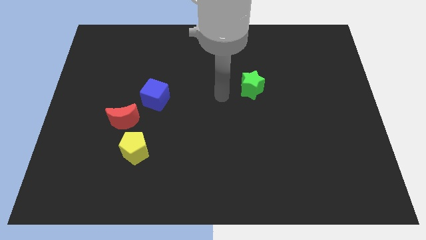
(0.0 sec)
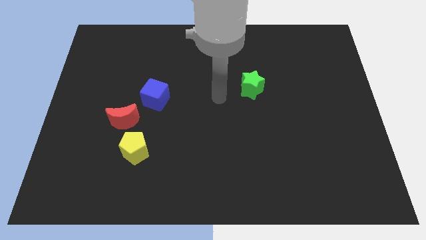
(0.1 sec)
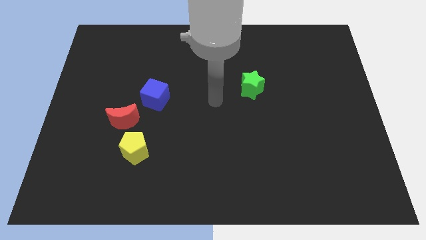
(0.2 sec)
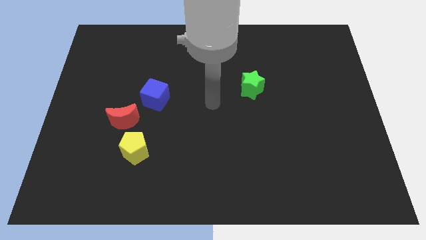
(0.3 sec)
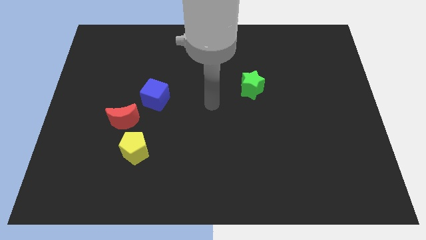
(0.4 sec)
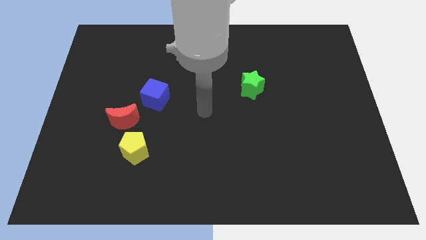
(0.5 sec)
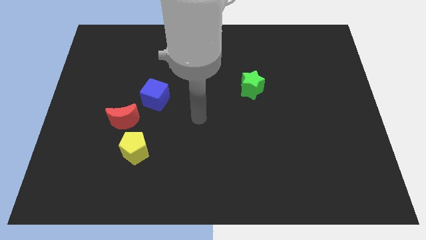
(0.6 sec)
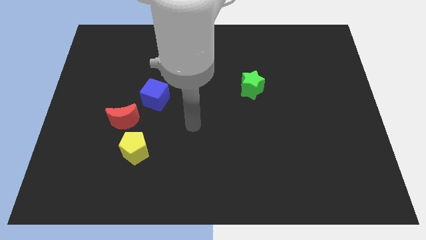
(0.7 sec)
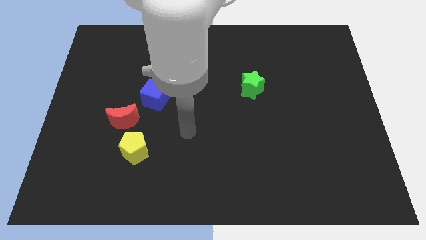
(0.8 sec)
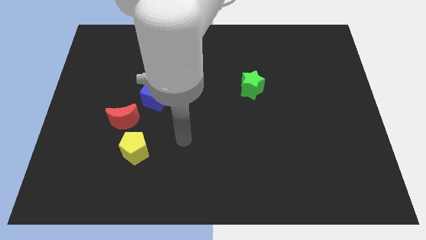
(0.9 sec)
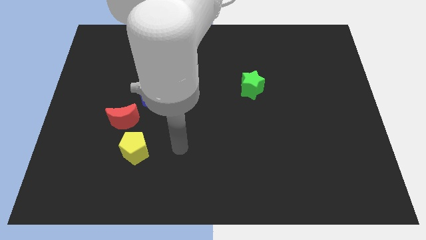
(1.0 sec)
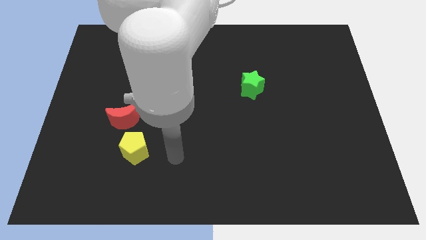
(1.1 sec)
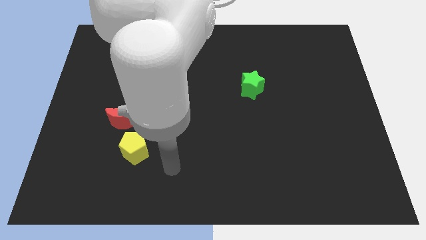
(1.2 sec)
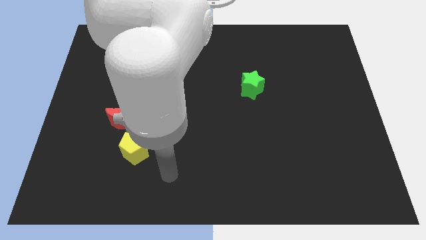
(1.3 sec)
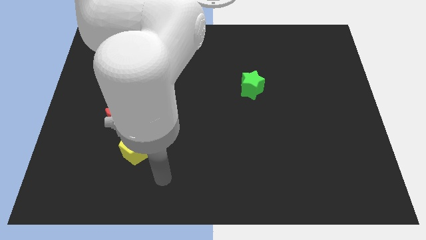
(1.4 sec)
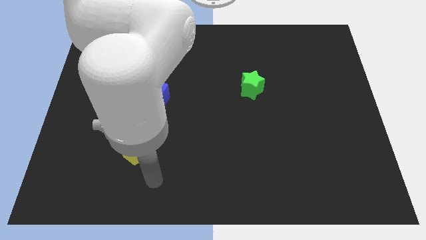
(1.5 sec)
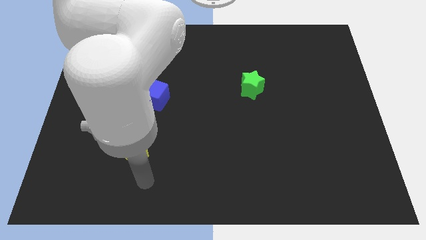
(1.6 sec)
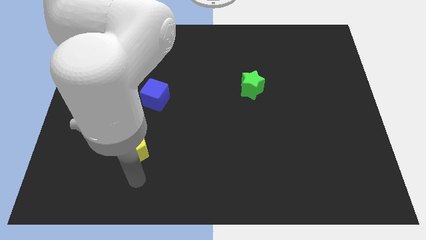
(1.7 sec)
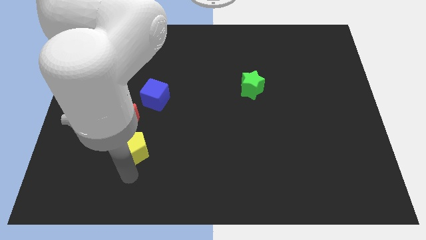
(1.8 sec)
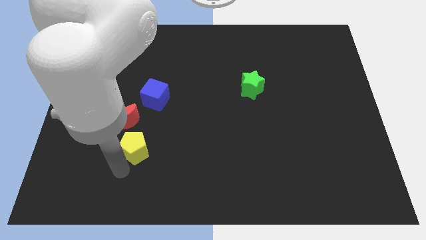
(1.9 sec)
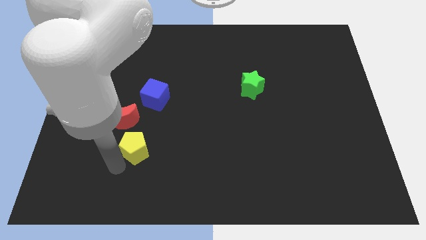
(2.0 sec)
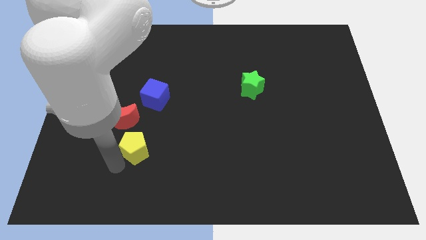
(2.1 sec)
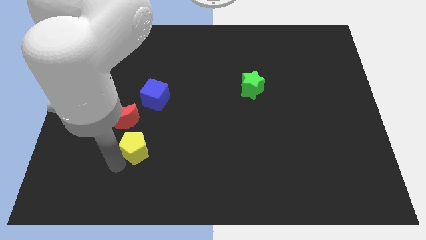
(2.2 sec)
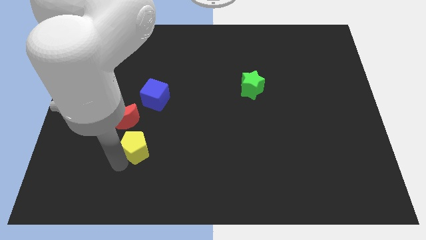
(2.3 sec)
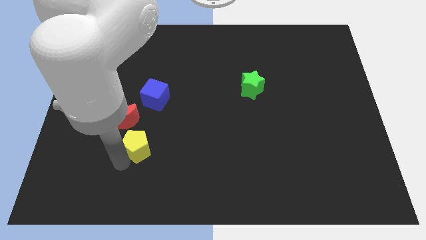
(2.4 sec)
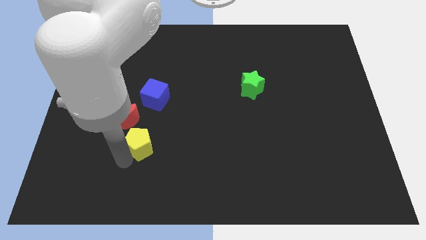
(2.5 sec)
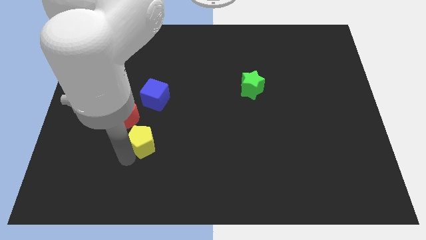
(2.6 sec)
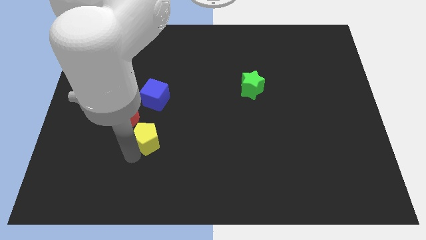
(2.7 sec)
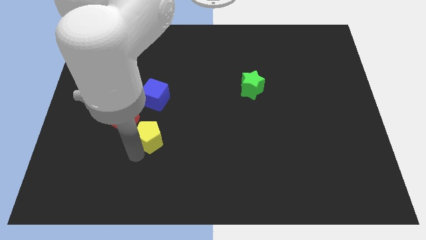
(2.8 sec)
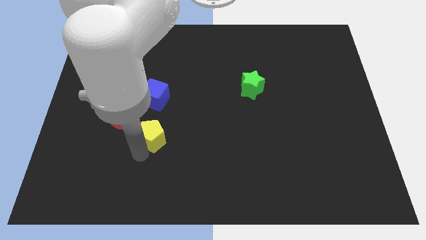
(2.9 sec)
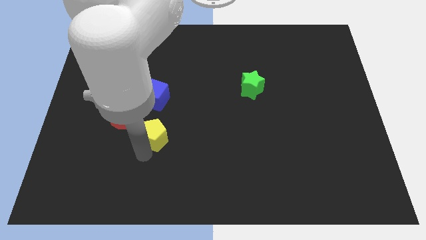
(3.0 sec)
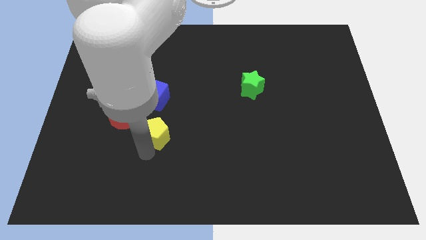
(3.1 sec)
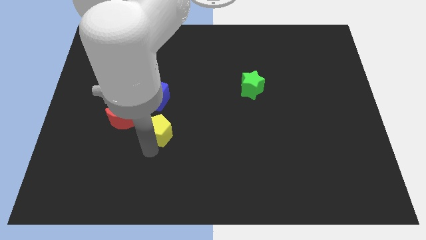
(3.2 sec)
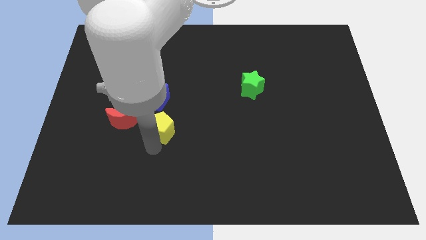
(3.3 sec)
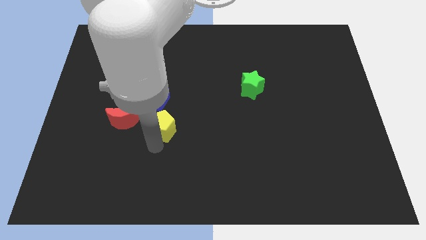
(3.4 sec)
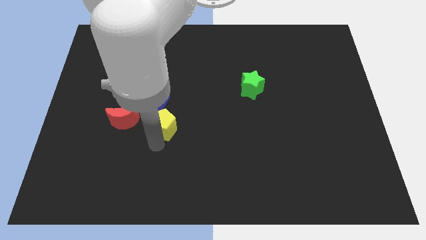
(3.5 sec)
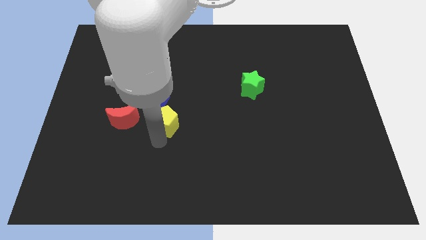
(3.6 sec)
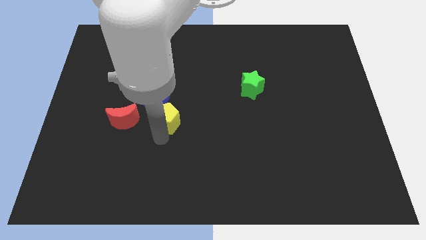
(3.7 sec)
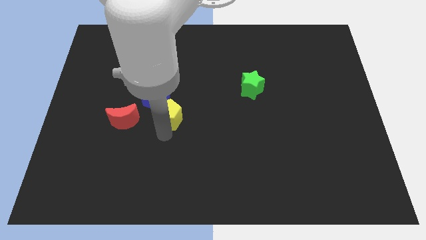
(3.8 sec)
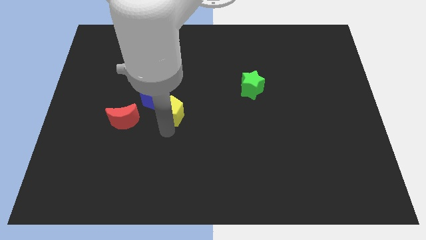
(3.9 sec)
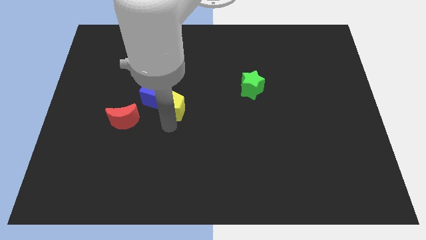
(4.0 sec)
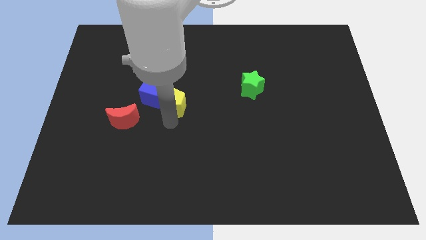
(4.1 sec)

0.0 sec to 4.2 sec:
push the yellow block towards the blue cube

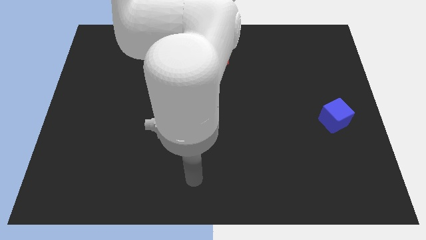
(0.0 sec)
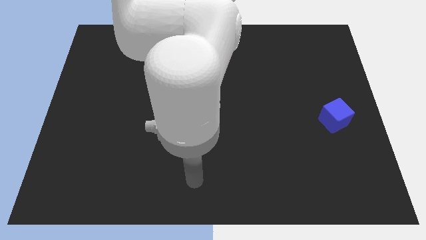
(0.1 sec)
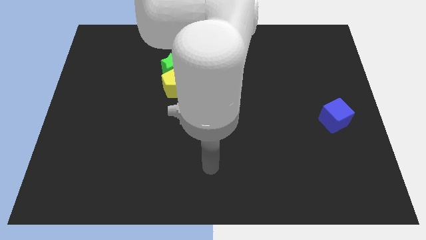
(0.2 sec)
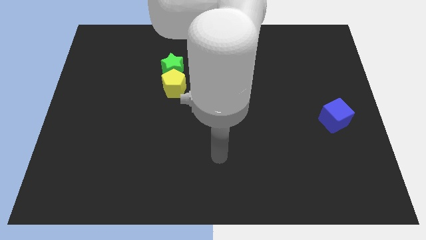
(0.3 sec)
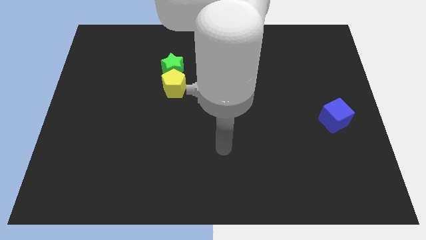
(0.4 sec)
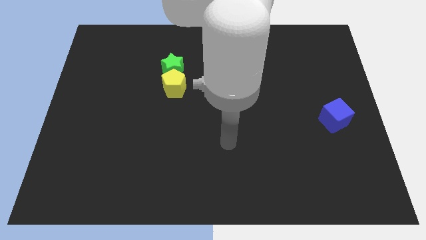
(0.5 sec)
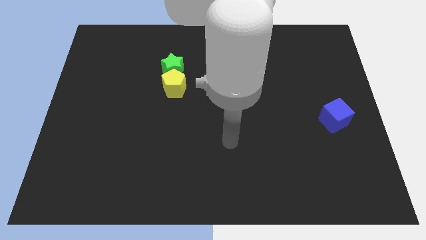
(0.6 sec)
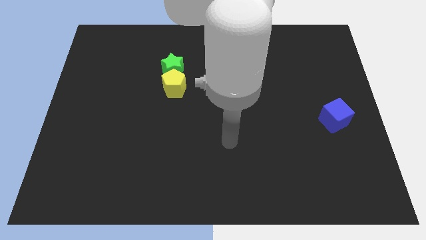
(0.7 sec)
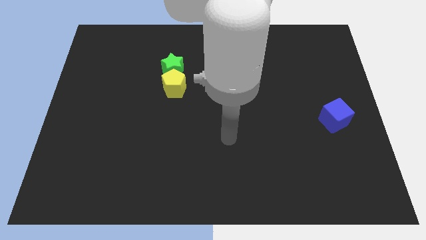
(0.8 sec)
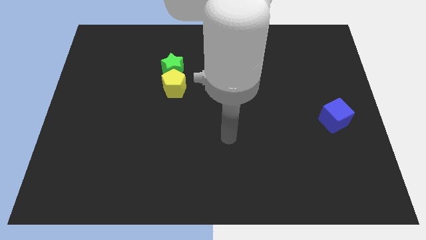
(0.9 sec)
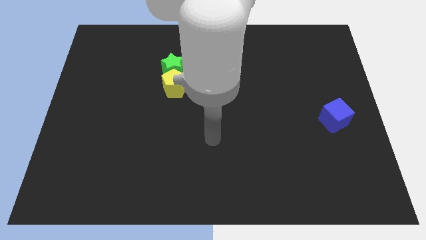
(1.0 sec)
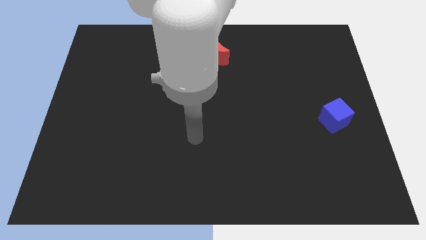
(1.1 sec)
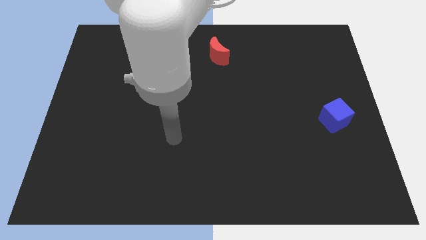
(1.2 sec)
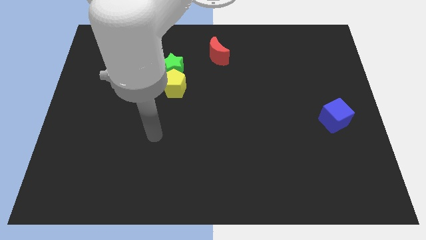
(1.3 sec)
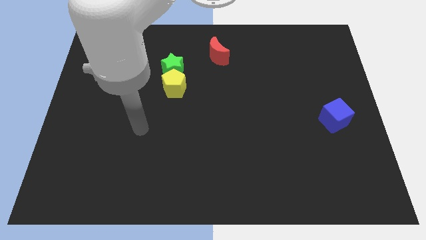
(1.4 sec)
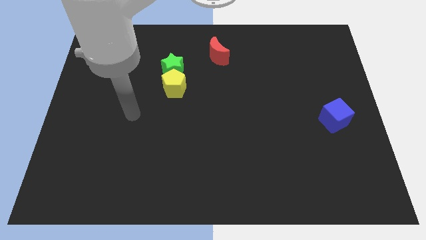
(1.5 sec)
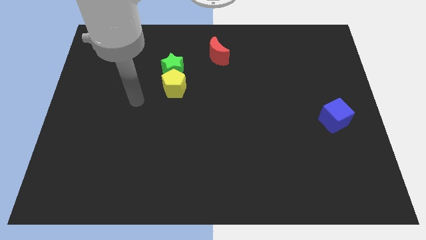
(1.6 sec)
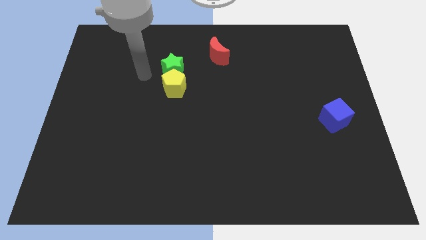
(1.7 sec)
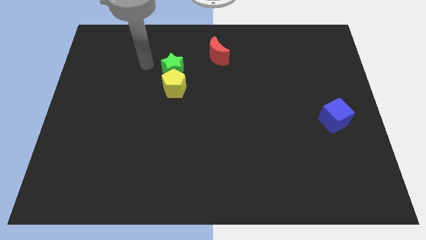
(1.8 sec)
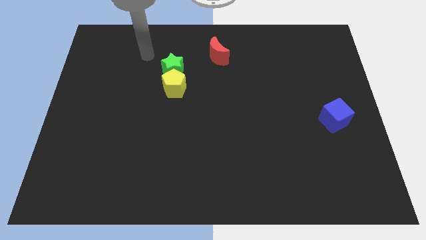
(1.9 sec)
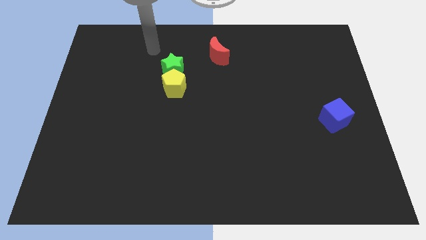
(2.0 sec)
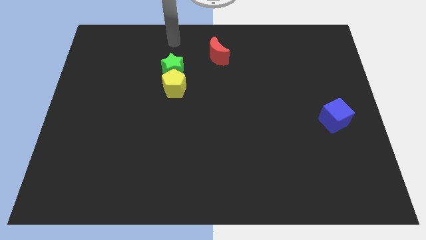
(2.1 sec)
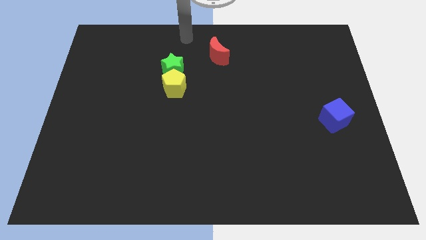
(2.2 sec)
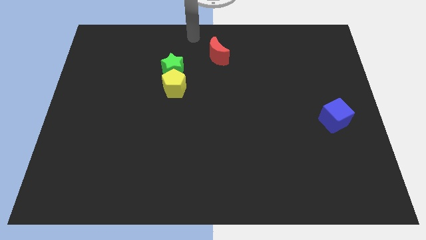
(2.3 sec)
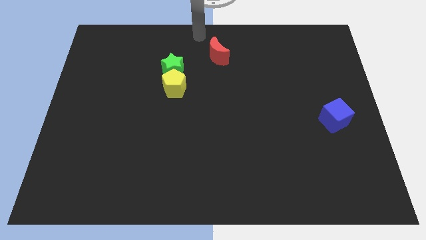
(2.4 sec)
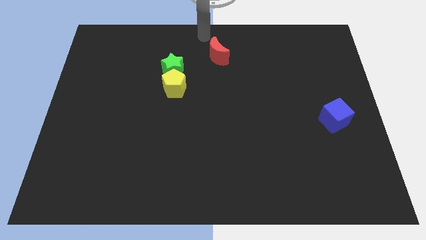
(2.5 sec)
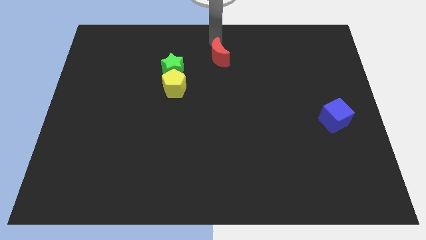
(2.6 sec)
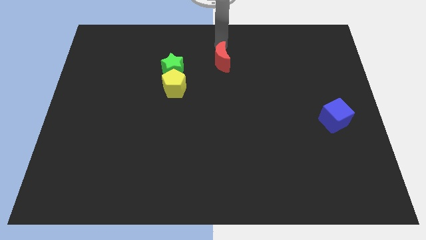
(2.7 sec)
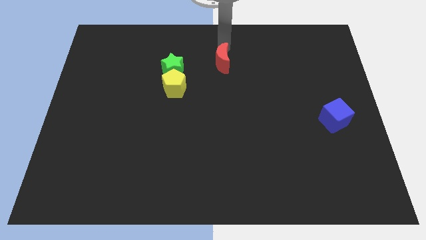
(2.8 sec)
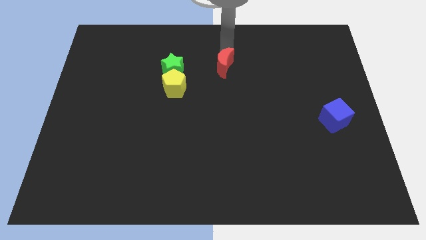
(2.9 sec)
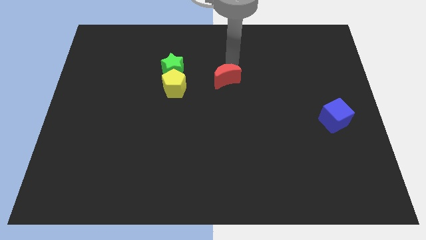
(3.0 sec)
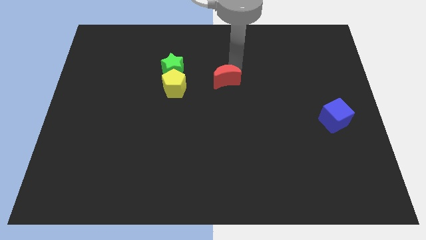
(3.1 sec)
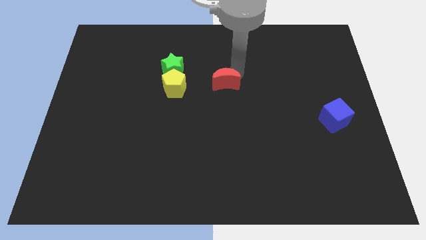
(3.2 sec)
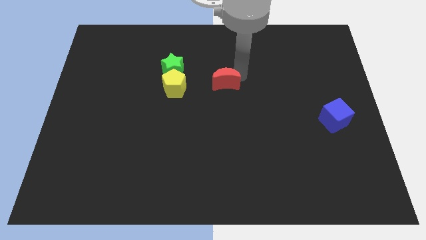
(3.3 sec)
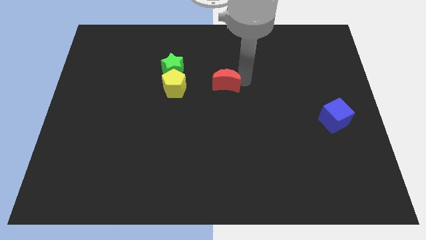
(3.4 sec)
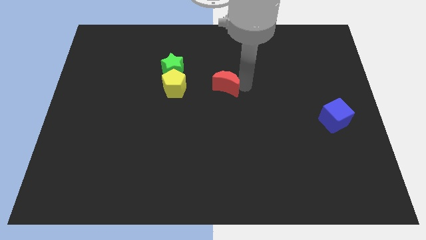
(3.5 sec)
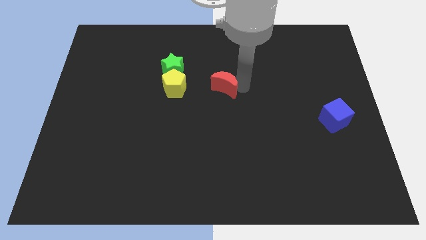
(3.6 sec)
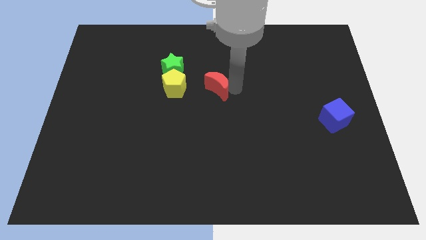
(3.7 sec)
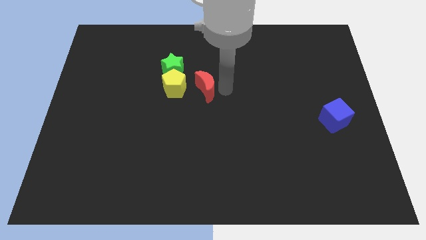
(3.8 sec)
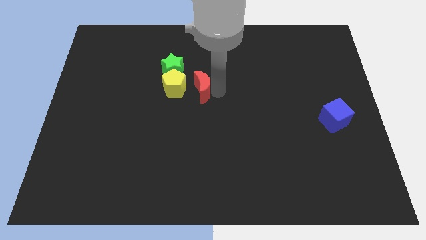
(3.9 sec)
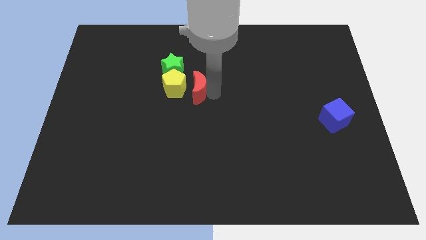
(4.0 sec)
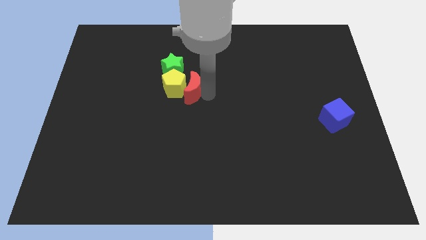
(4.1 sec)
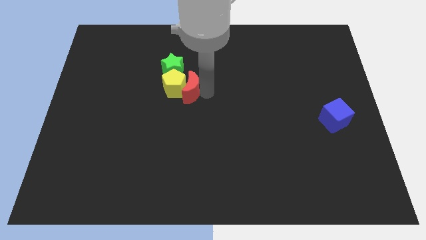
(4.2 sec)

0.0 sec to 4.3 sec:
push the moon next to the yellow pentagon

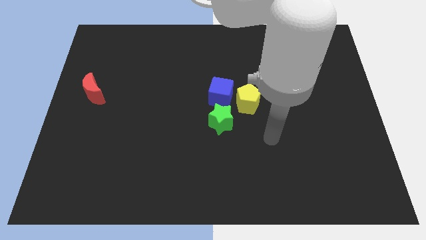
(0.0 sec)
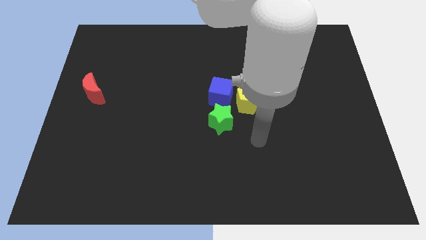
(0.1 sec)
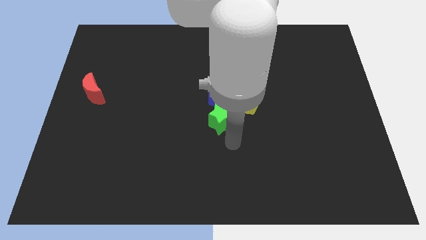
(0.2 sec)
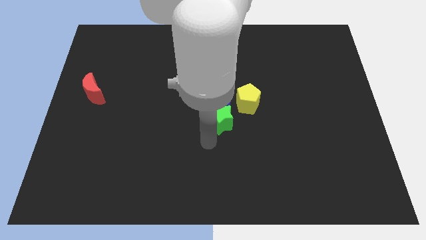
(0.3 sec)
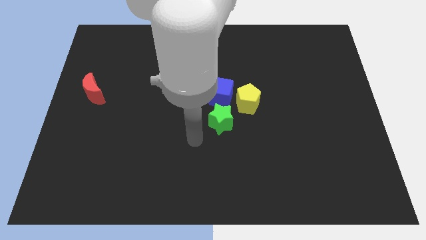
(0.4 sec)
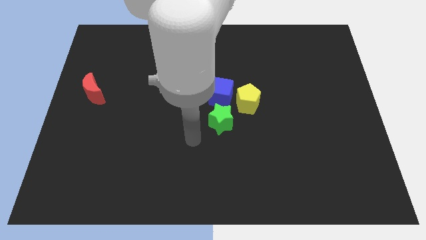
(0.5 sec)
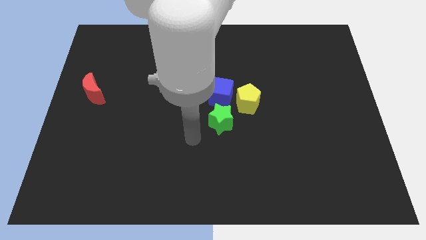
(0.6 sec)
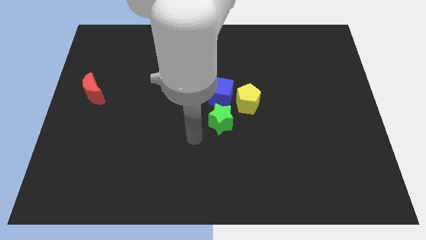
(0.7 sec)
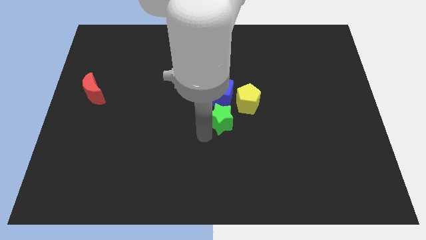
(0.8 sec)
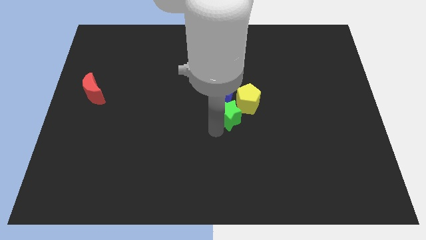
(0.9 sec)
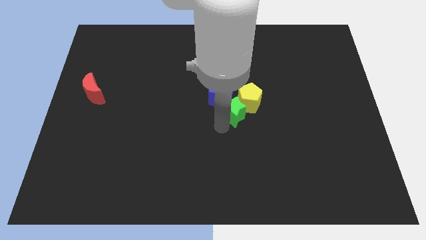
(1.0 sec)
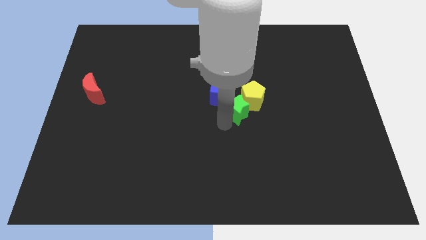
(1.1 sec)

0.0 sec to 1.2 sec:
move the green star close to the yellow pentagon
